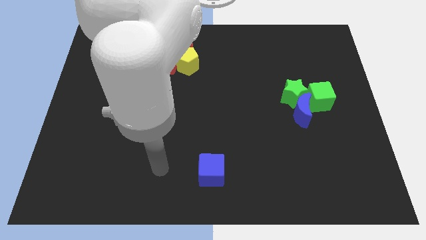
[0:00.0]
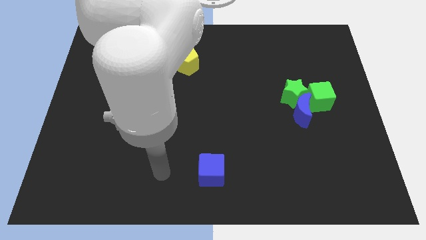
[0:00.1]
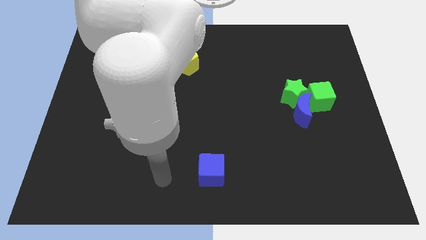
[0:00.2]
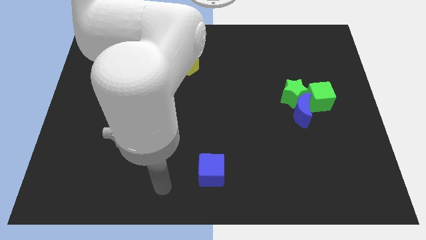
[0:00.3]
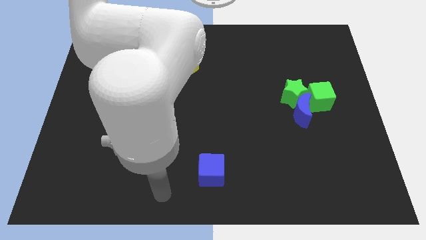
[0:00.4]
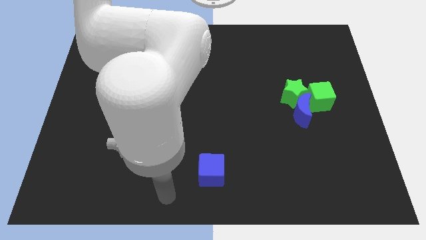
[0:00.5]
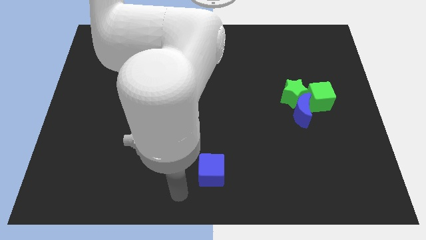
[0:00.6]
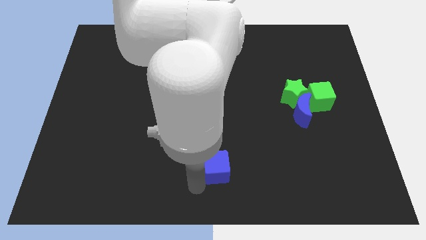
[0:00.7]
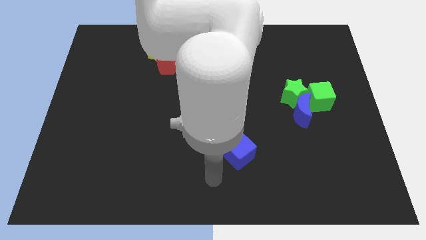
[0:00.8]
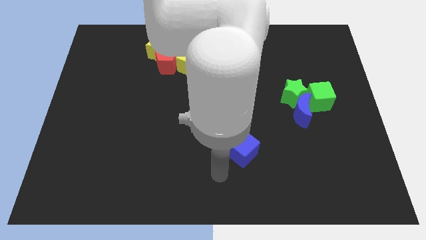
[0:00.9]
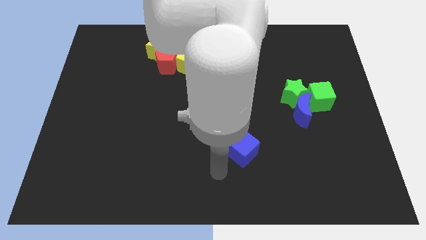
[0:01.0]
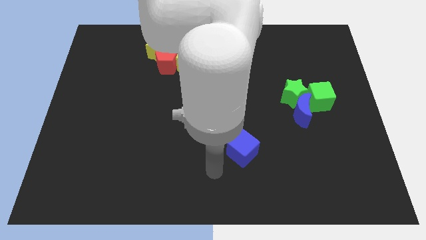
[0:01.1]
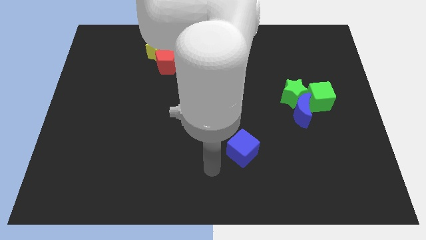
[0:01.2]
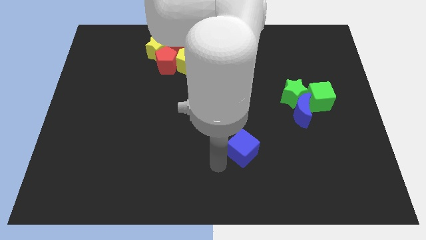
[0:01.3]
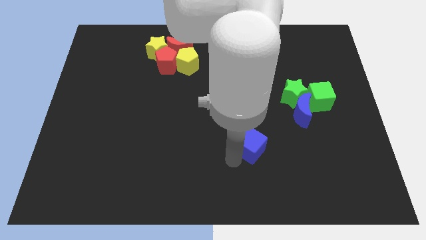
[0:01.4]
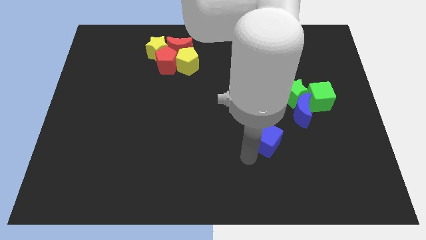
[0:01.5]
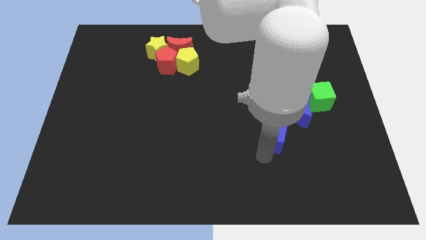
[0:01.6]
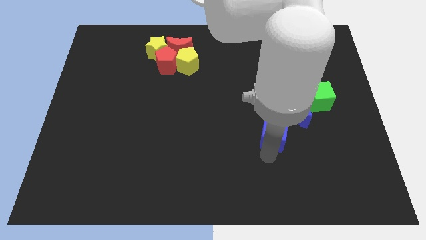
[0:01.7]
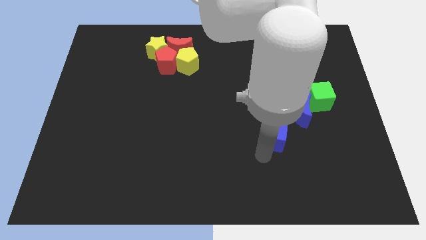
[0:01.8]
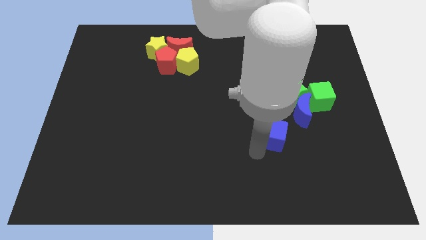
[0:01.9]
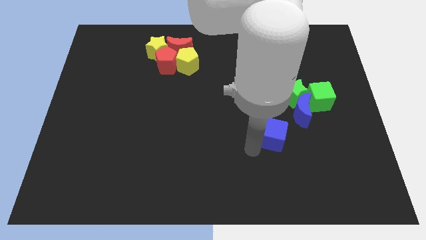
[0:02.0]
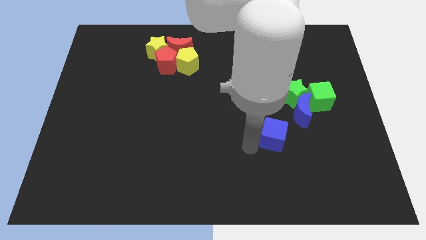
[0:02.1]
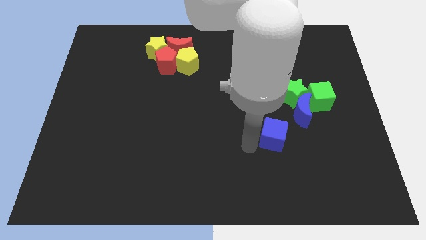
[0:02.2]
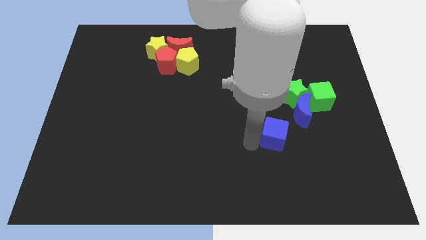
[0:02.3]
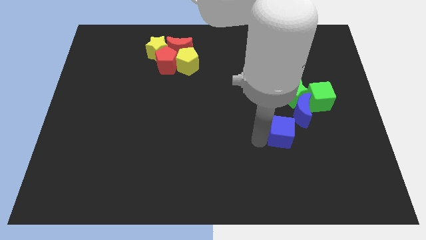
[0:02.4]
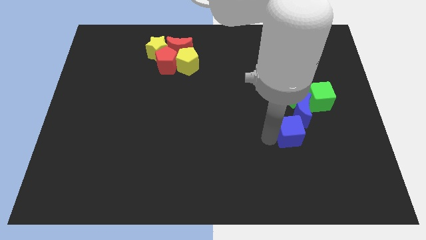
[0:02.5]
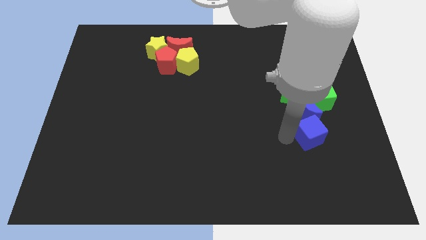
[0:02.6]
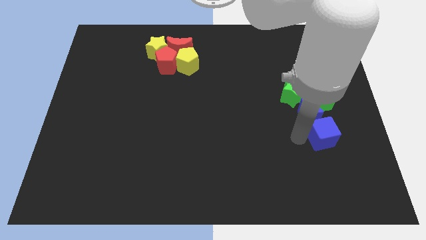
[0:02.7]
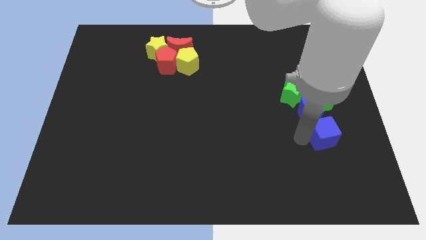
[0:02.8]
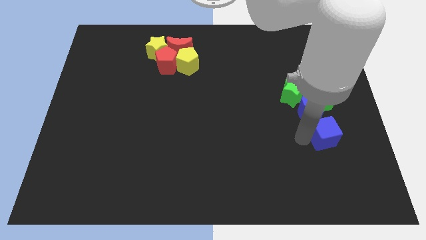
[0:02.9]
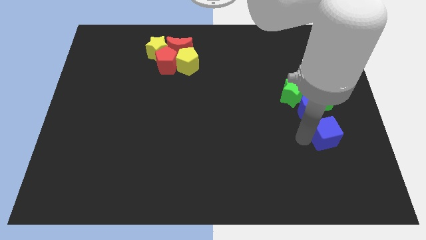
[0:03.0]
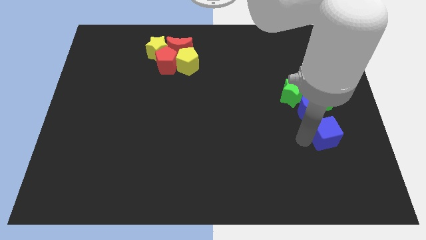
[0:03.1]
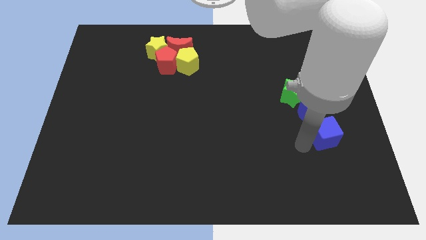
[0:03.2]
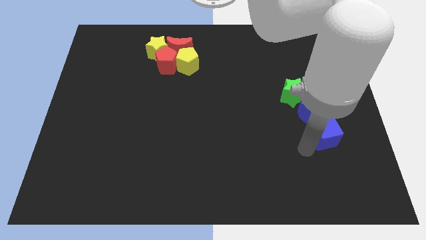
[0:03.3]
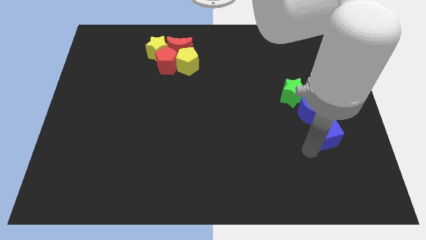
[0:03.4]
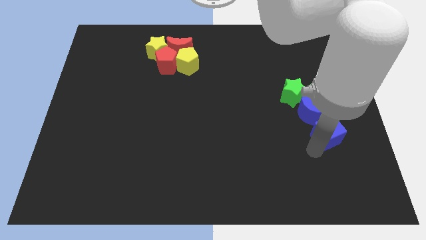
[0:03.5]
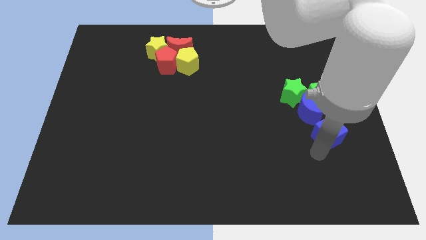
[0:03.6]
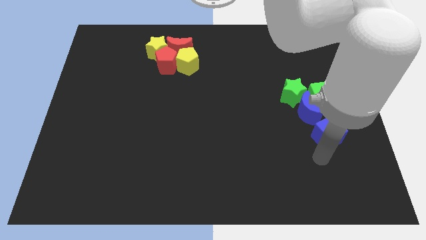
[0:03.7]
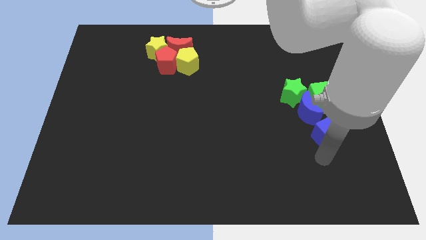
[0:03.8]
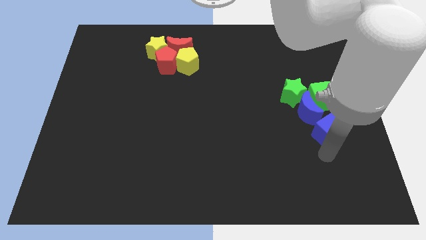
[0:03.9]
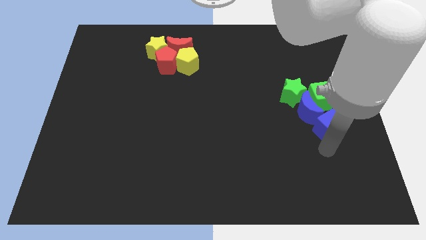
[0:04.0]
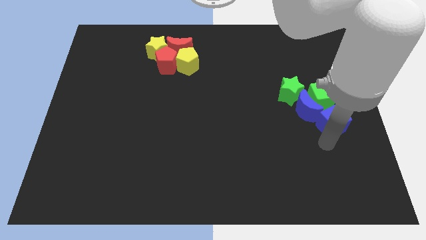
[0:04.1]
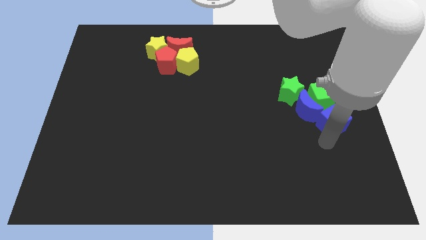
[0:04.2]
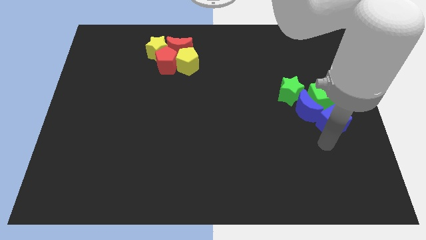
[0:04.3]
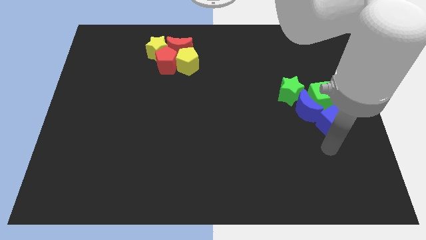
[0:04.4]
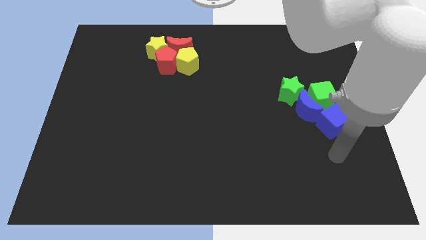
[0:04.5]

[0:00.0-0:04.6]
push the blue cube to the bottom side of the green cube

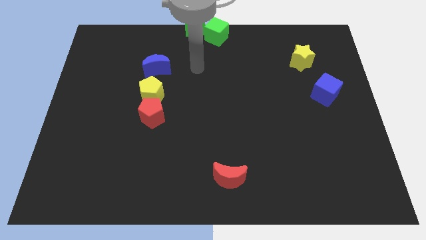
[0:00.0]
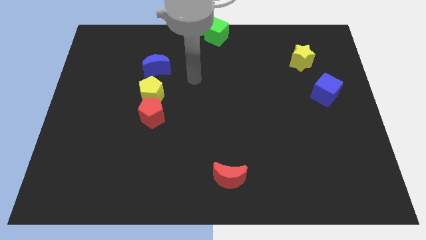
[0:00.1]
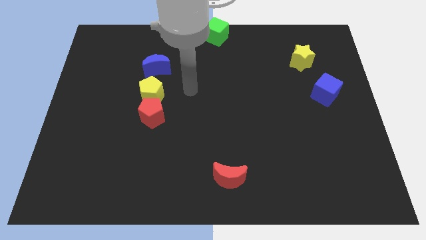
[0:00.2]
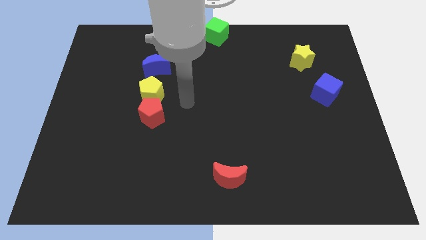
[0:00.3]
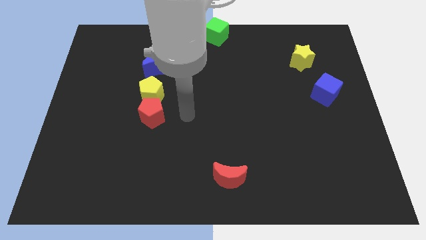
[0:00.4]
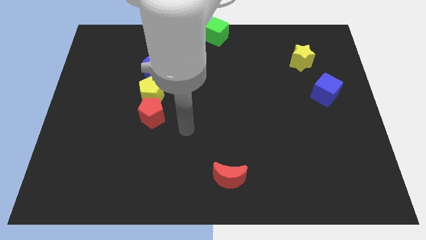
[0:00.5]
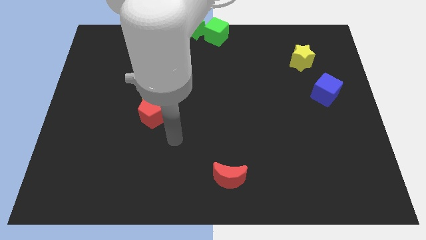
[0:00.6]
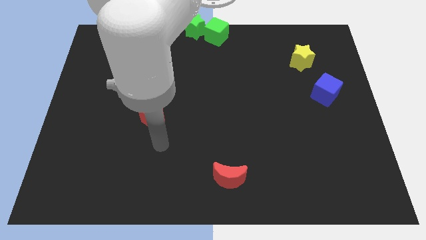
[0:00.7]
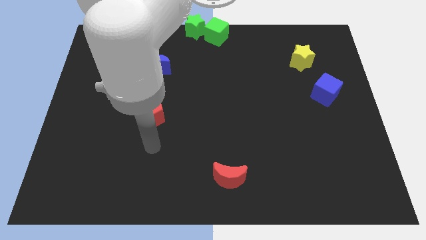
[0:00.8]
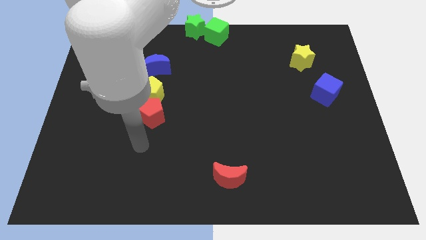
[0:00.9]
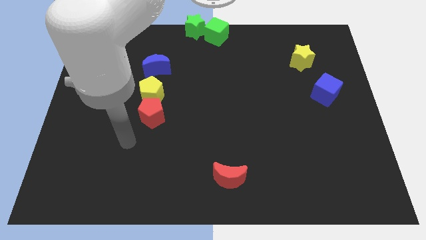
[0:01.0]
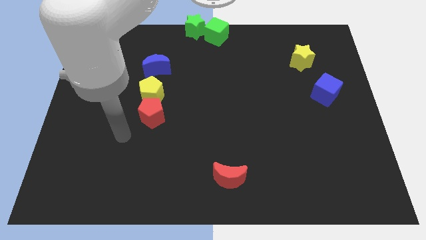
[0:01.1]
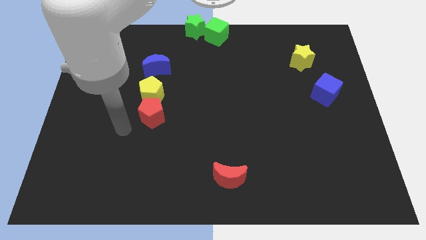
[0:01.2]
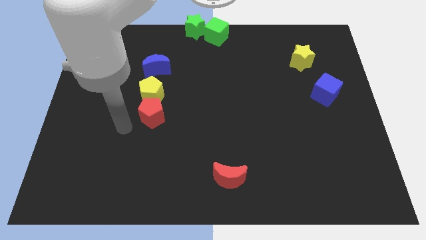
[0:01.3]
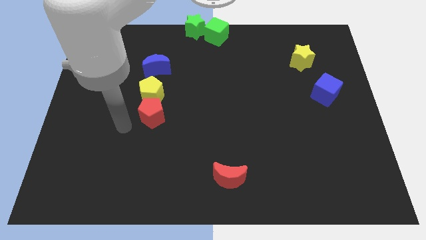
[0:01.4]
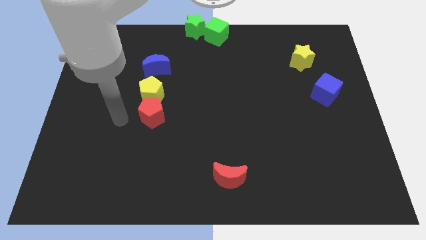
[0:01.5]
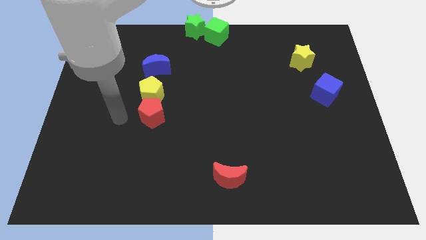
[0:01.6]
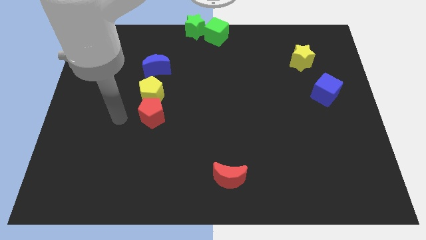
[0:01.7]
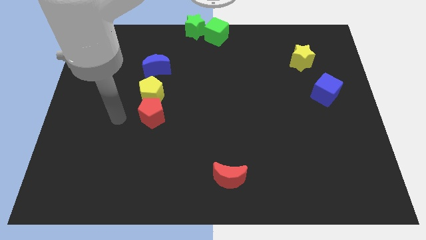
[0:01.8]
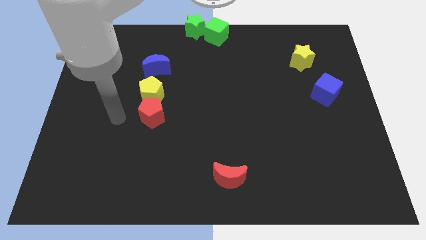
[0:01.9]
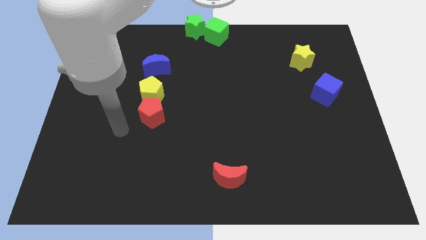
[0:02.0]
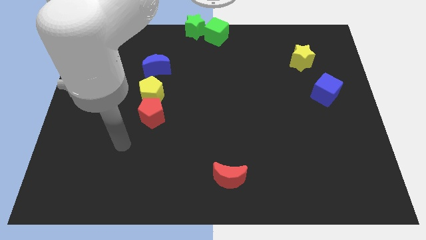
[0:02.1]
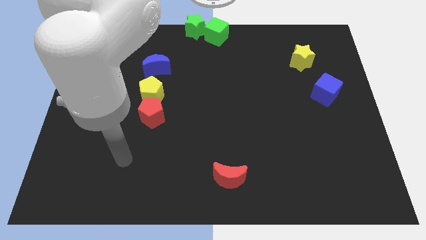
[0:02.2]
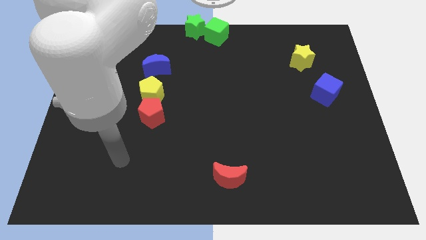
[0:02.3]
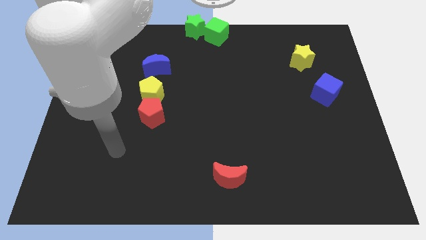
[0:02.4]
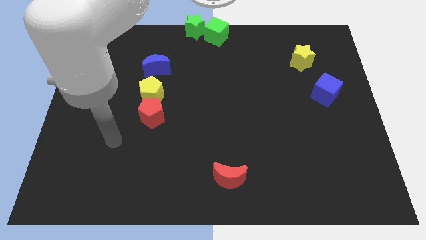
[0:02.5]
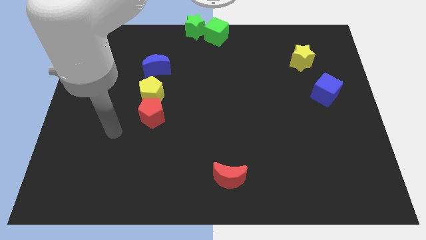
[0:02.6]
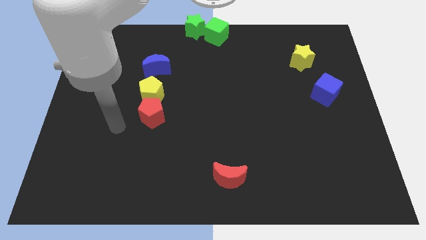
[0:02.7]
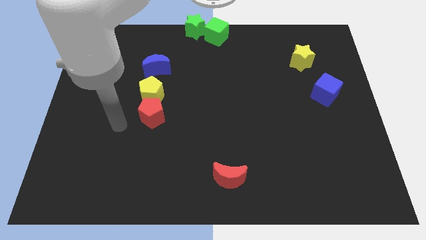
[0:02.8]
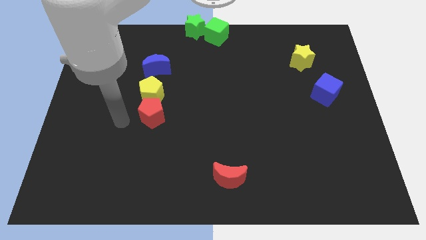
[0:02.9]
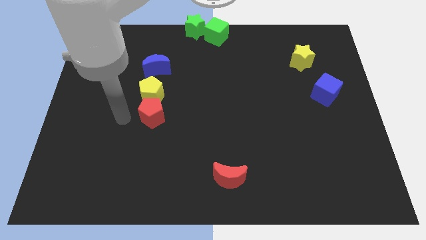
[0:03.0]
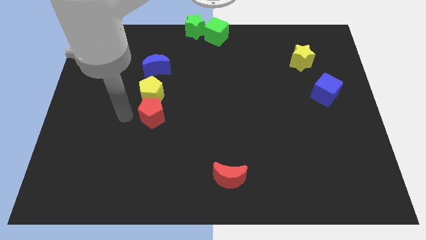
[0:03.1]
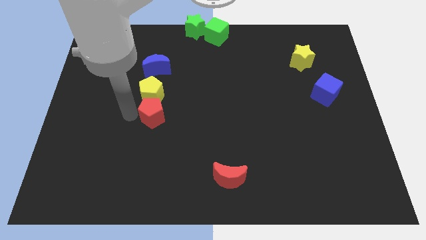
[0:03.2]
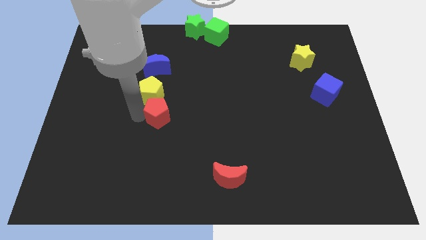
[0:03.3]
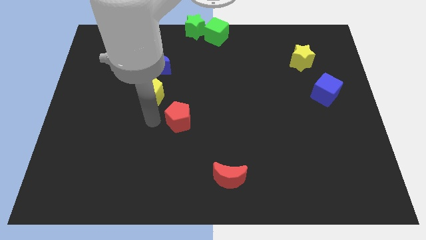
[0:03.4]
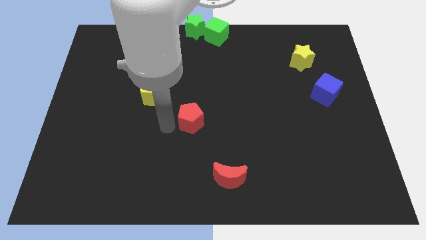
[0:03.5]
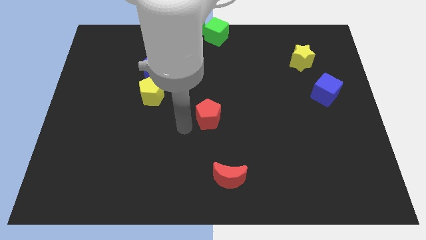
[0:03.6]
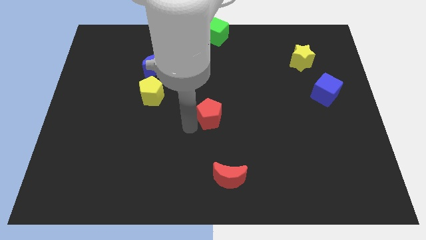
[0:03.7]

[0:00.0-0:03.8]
push the red pentagon to the center of the board

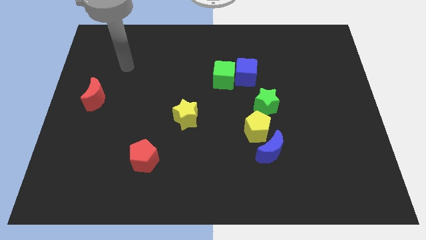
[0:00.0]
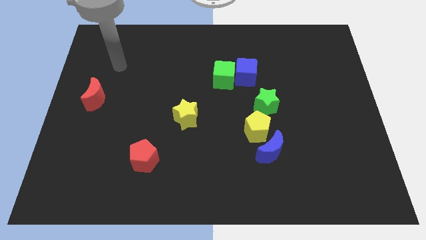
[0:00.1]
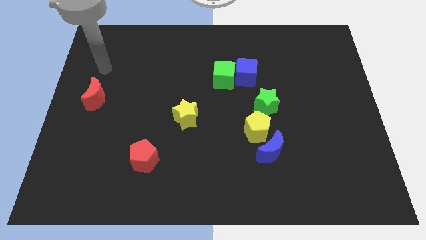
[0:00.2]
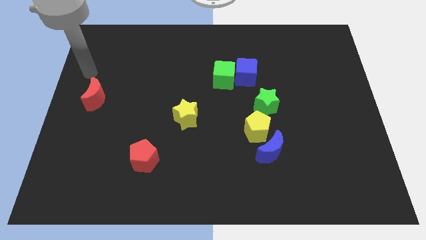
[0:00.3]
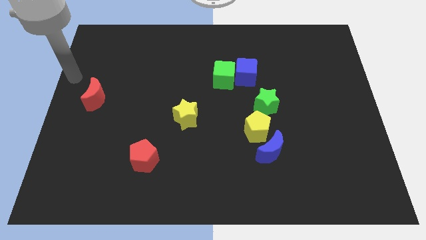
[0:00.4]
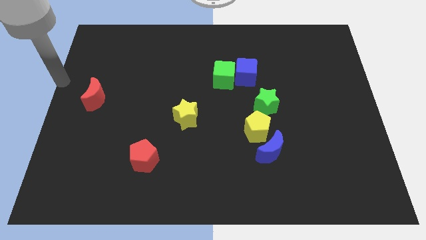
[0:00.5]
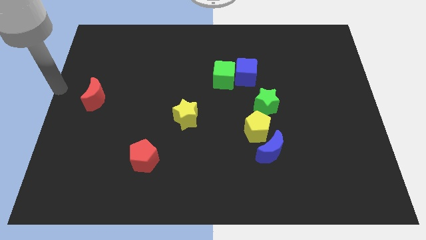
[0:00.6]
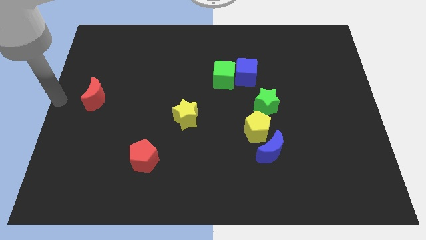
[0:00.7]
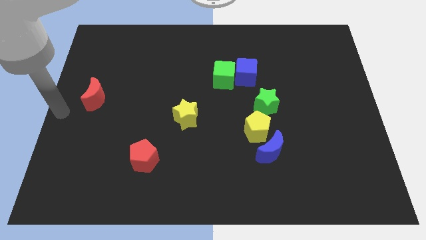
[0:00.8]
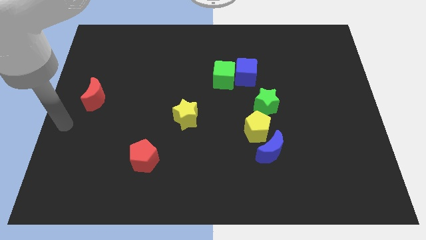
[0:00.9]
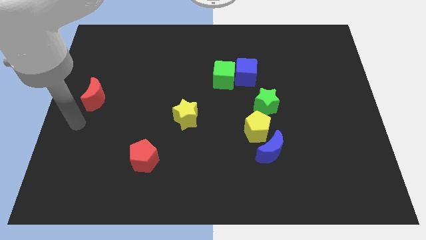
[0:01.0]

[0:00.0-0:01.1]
move your arm to the bottom of the red crescent
